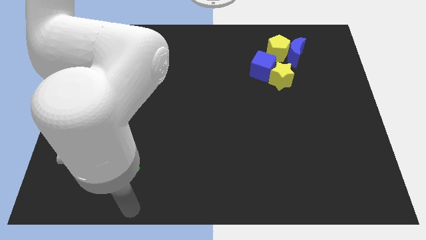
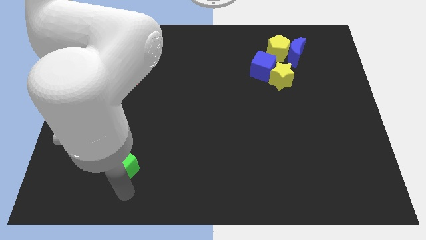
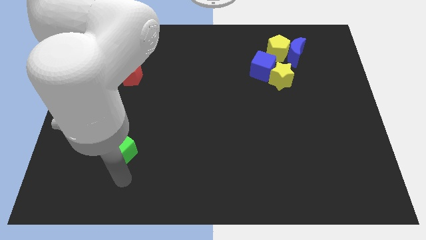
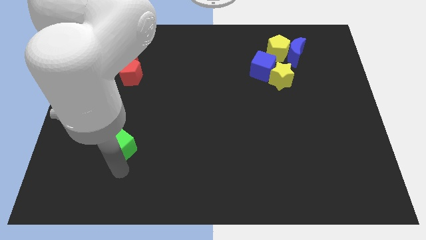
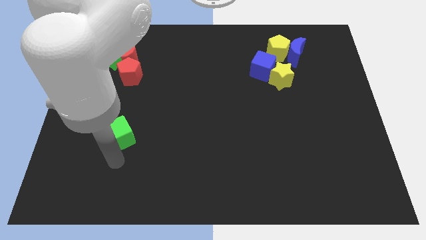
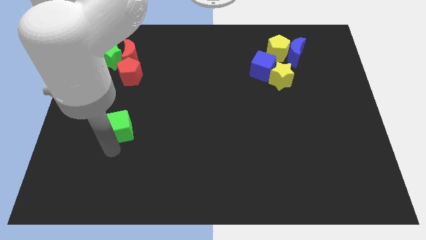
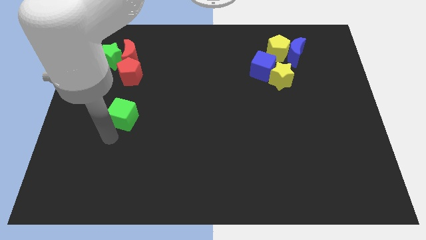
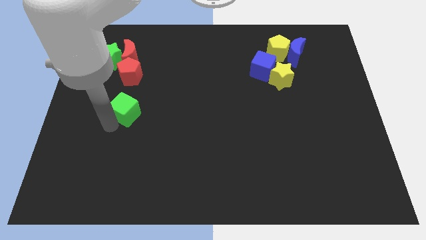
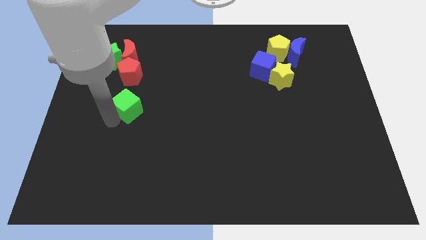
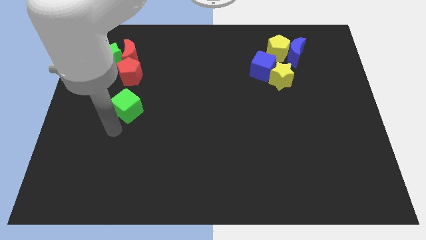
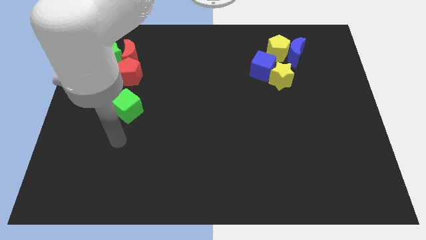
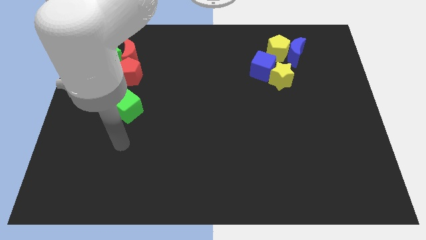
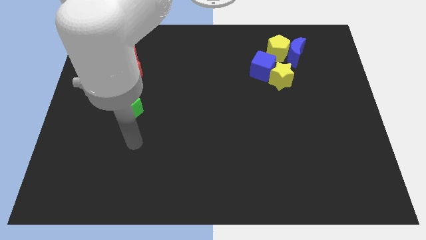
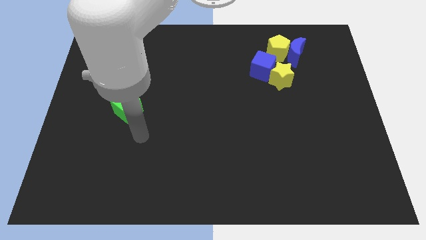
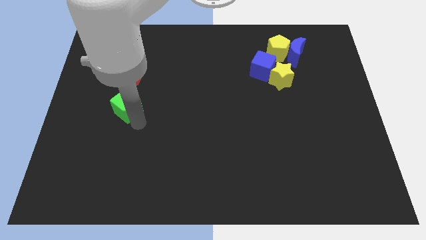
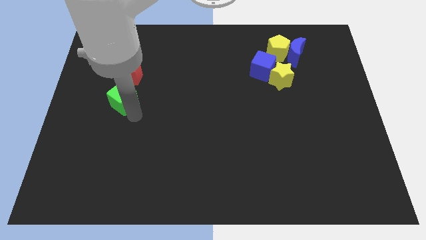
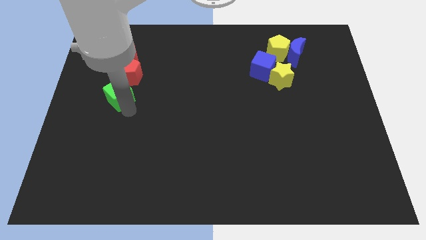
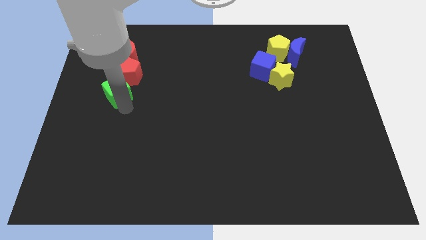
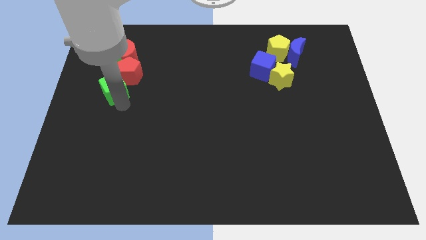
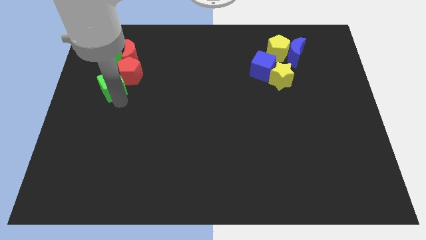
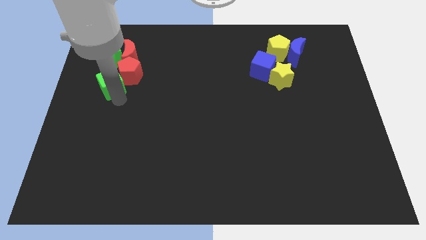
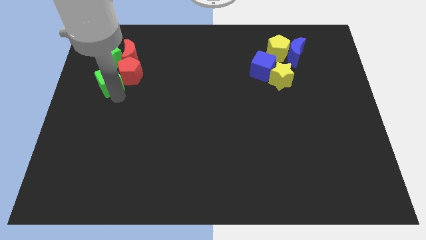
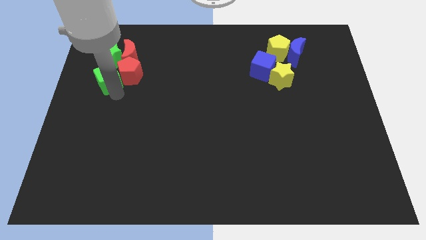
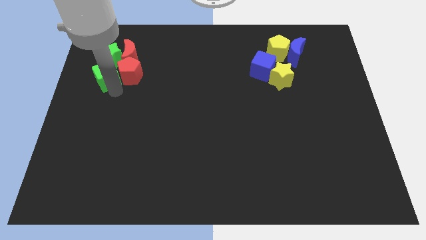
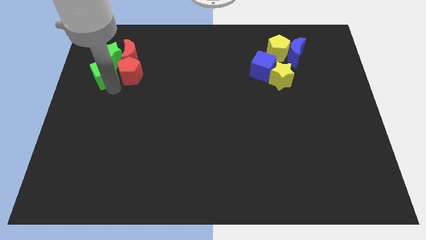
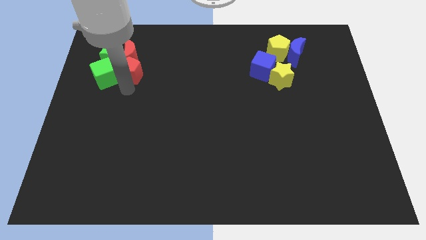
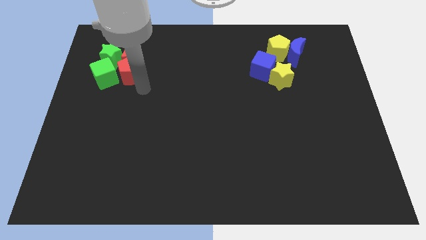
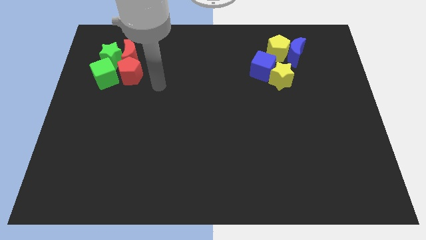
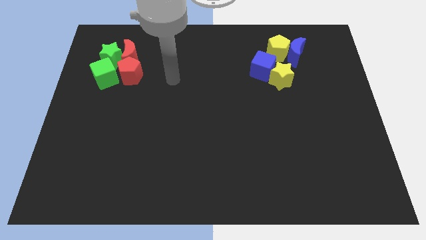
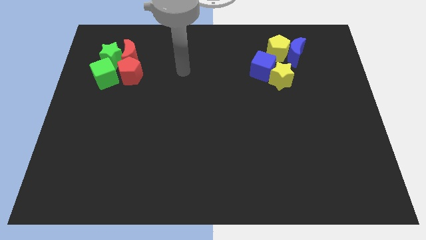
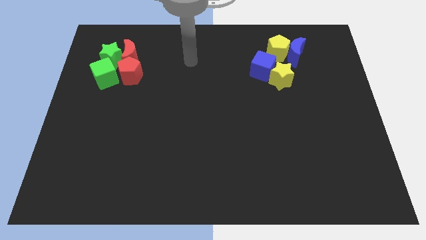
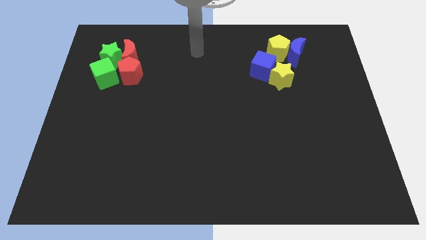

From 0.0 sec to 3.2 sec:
push the green cube to the left of the red pentagon

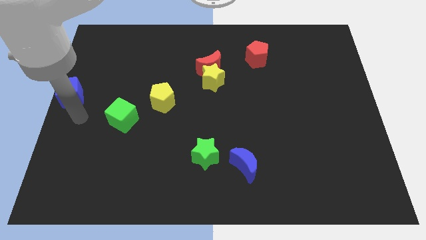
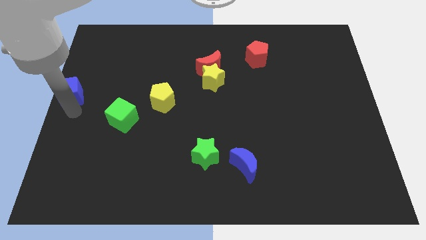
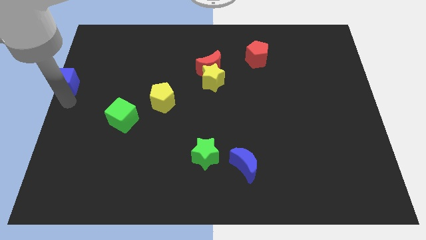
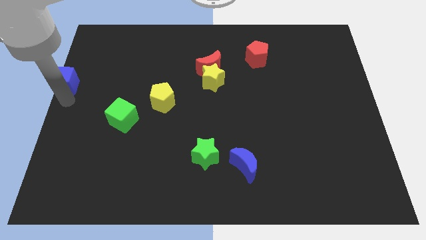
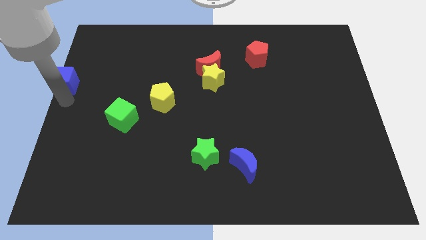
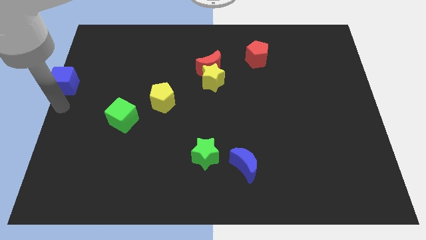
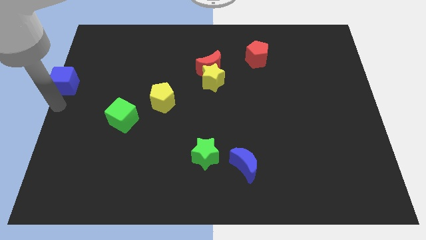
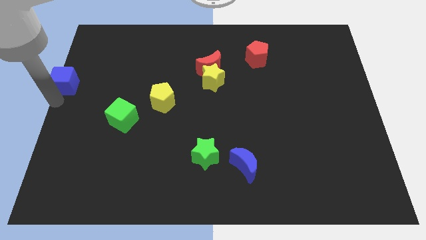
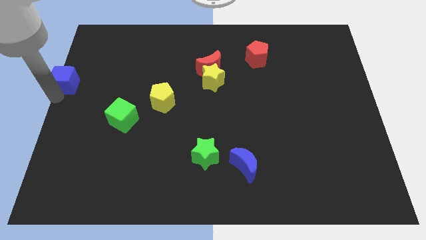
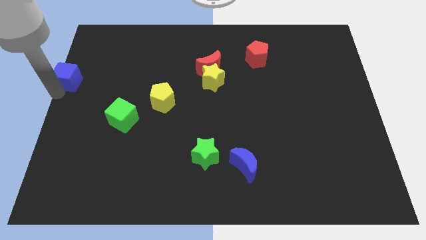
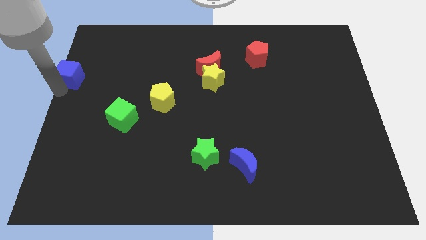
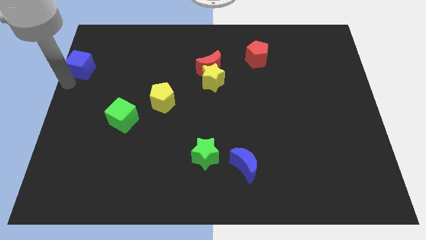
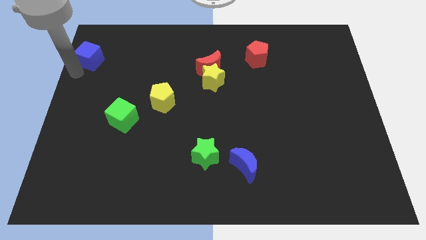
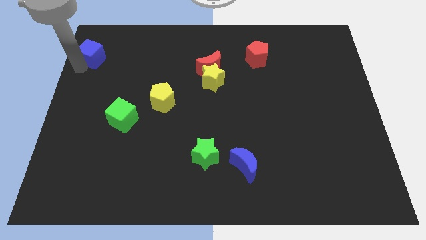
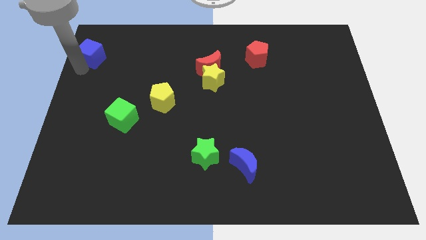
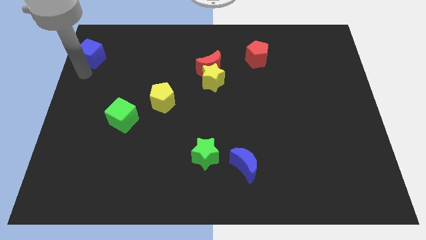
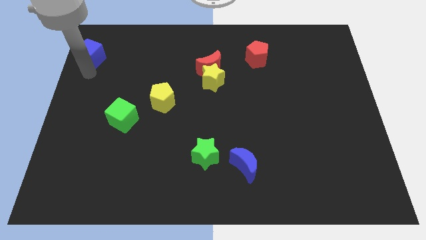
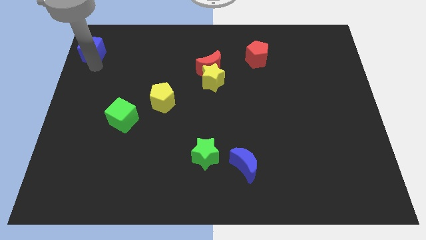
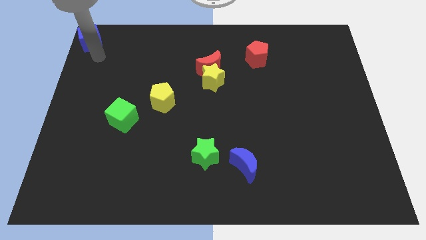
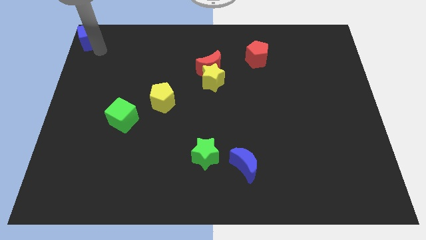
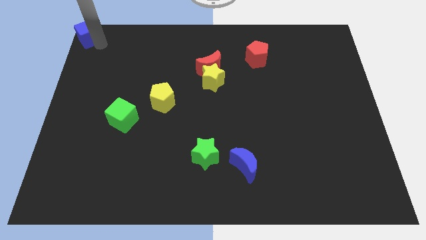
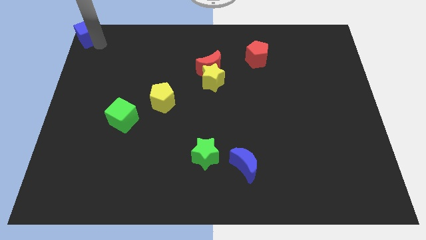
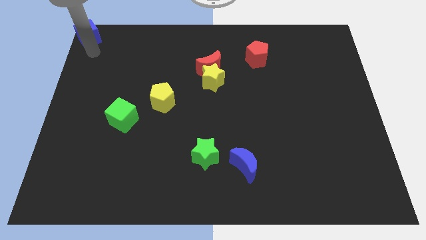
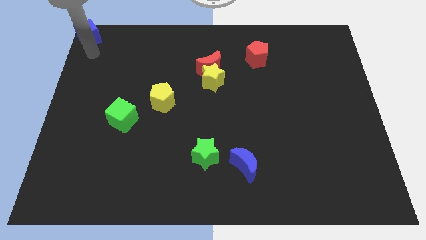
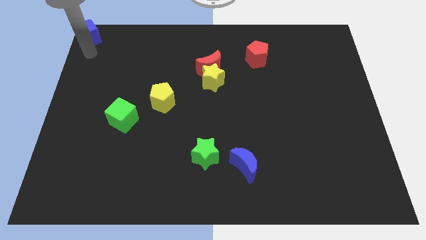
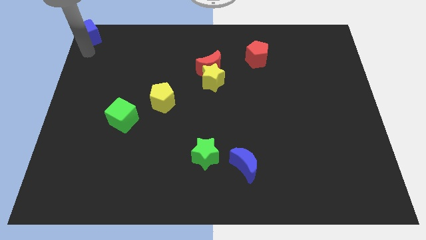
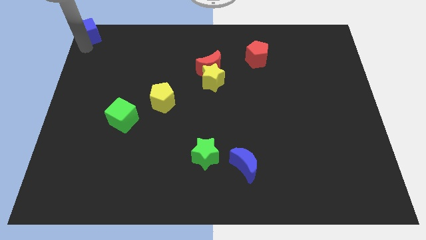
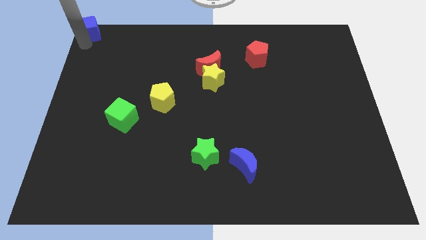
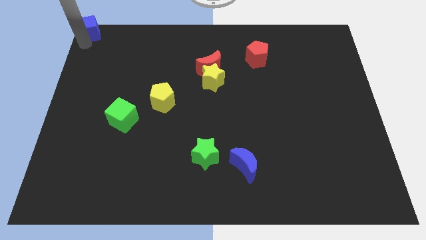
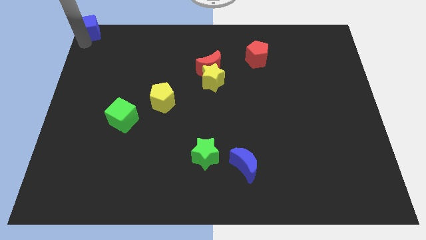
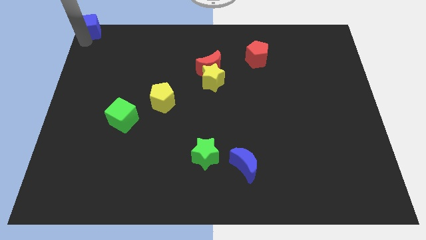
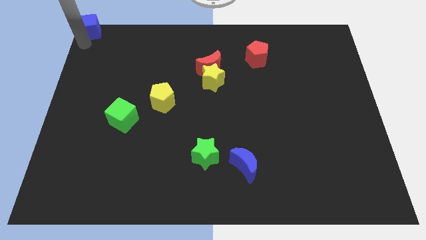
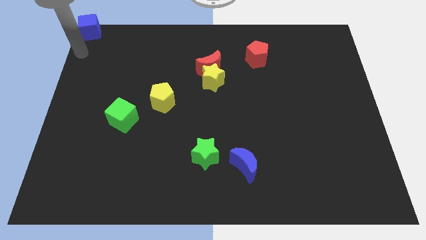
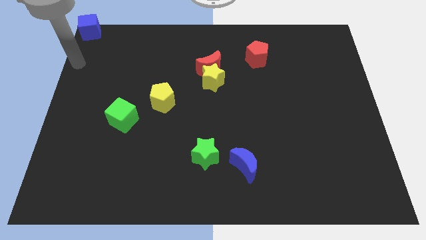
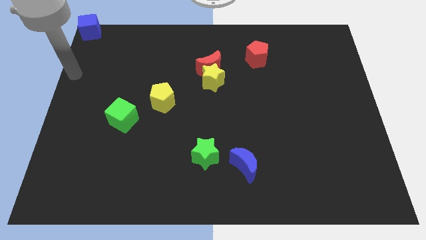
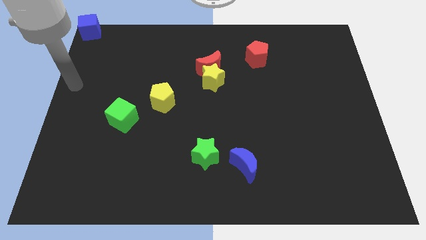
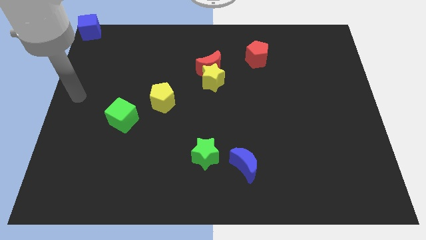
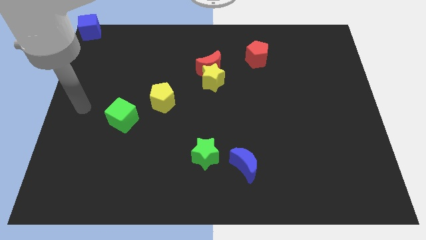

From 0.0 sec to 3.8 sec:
push the blue cube to the top left corner of the board

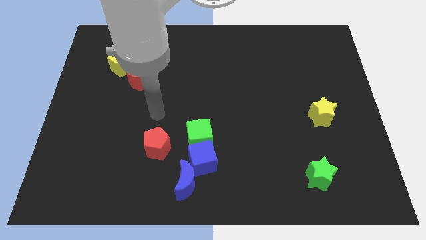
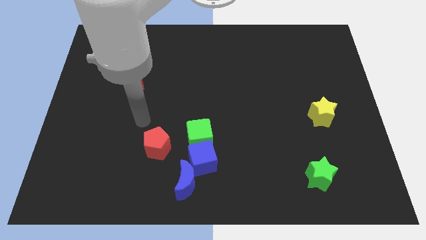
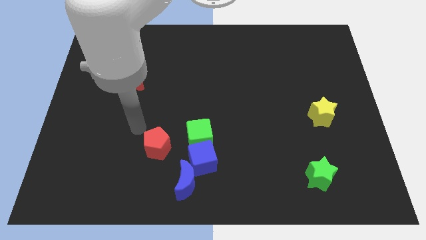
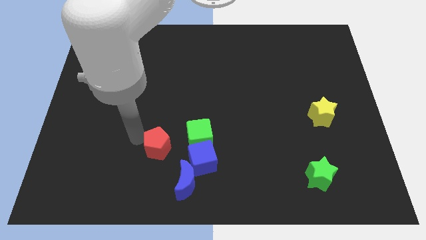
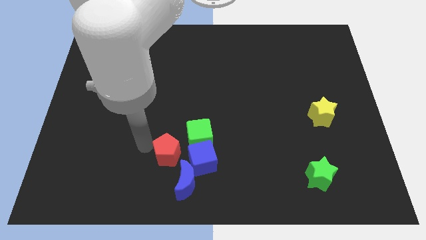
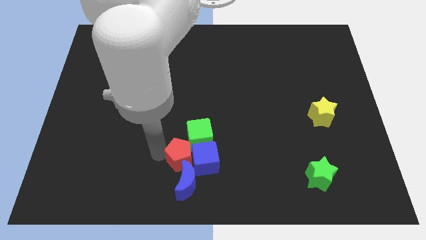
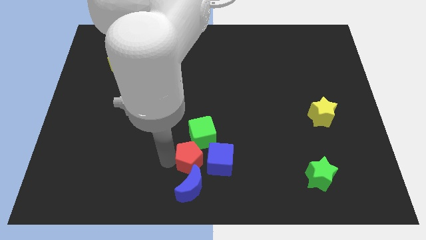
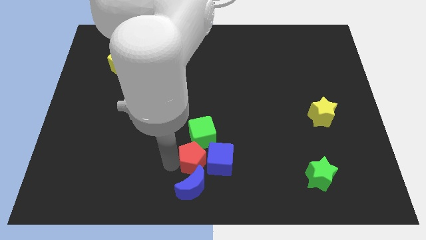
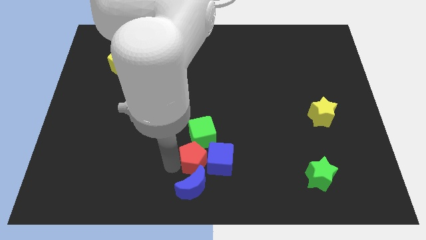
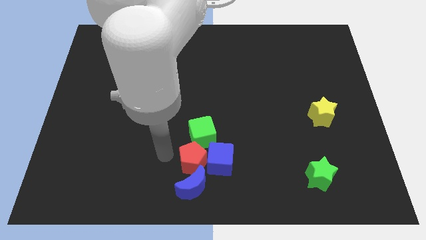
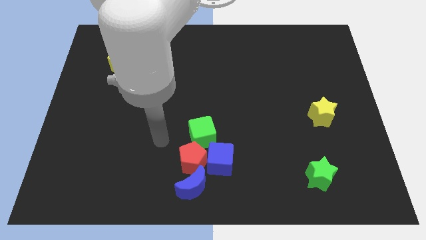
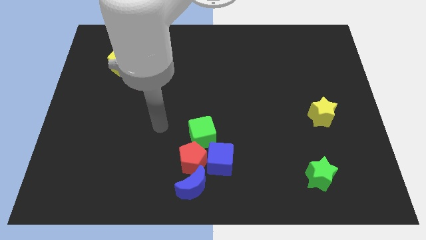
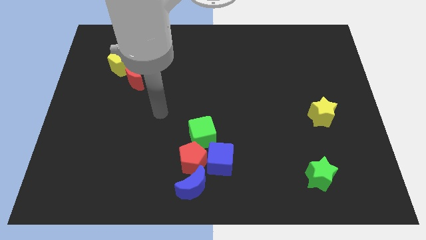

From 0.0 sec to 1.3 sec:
push the red pentagon towards the blue blocks

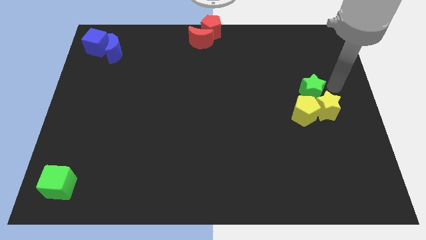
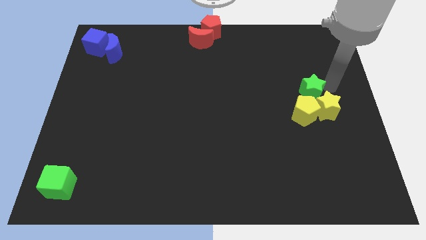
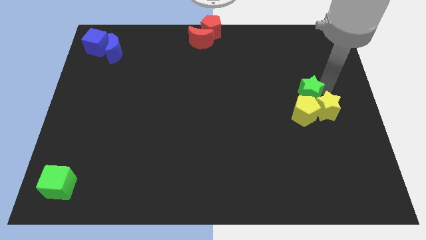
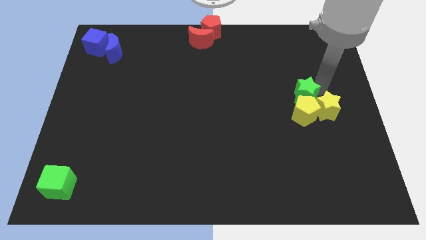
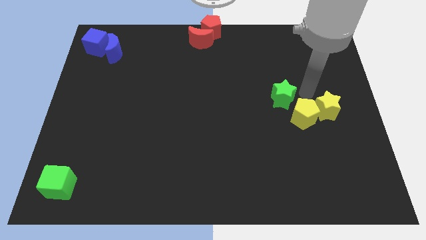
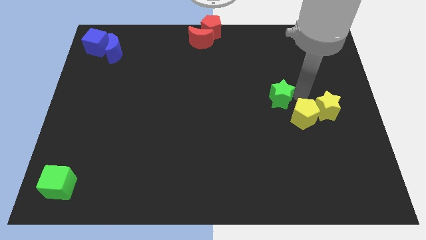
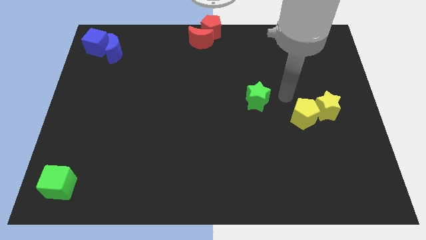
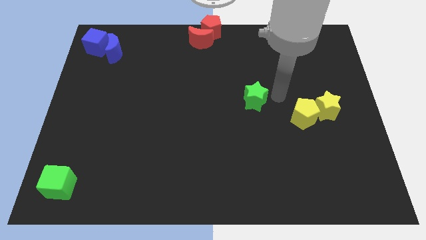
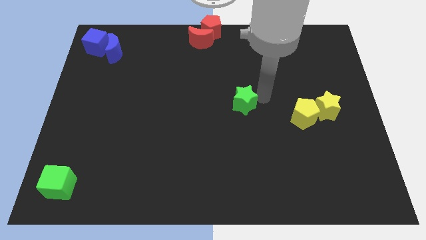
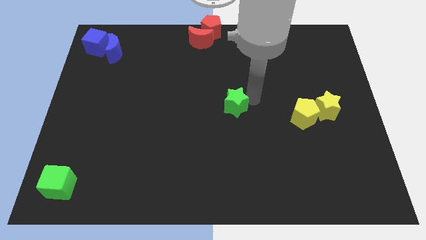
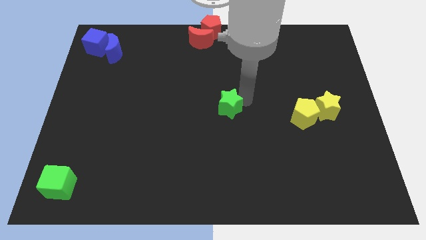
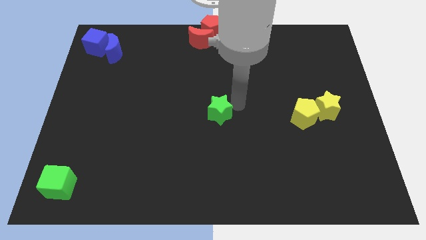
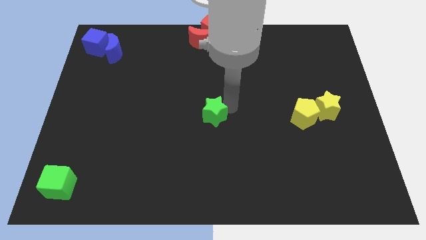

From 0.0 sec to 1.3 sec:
separate the green star from the yellow blocks
